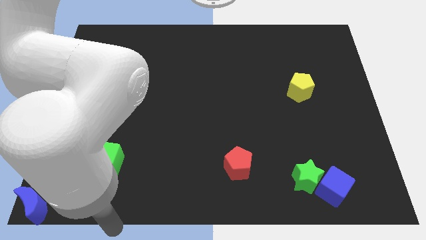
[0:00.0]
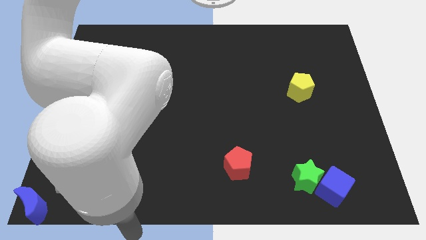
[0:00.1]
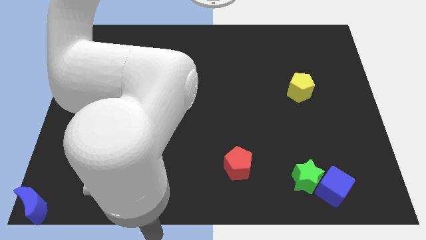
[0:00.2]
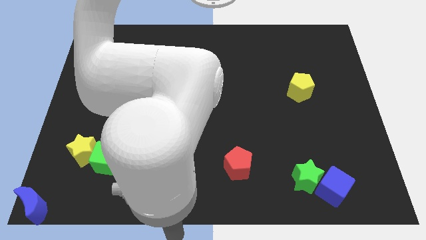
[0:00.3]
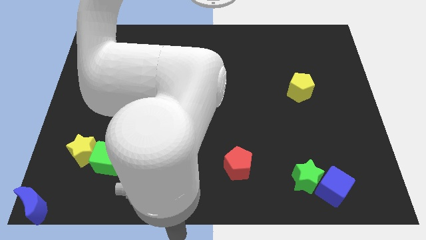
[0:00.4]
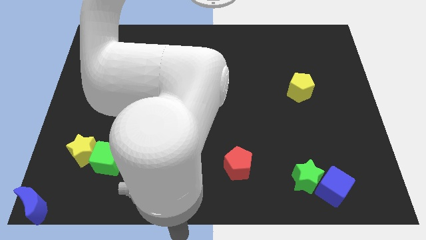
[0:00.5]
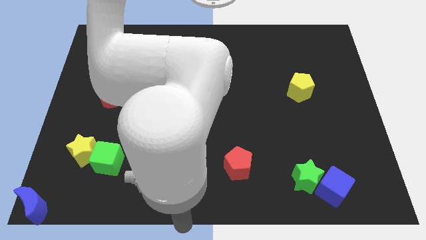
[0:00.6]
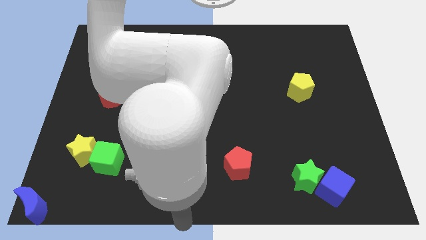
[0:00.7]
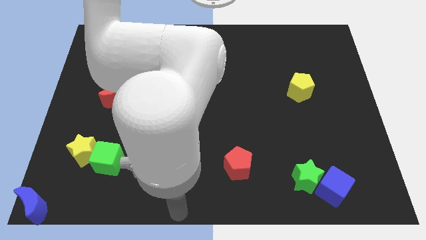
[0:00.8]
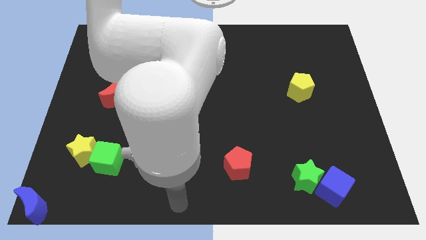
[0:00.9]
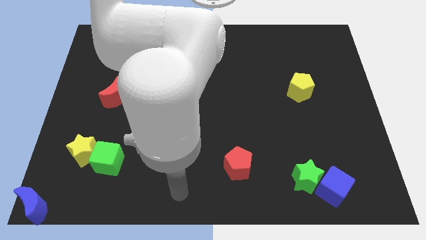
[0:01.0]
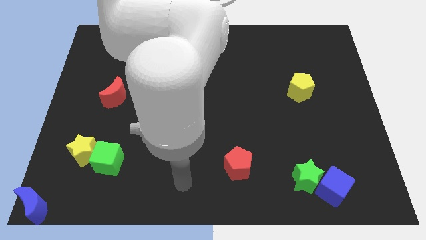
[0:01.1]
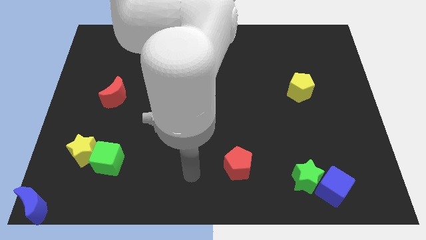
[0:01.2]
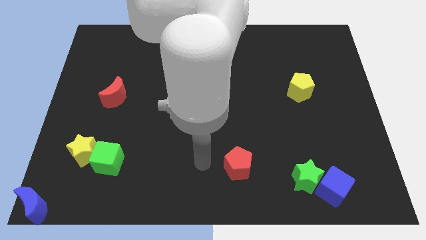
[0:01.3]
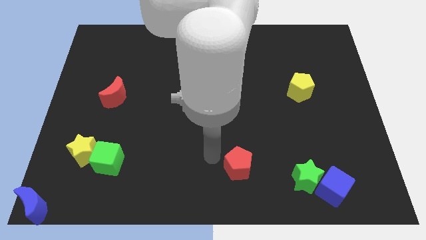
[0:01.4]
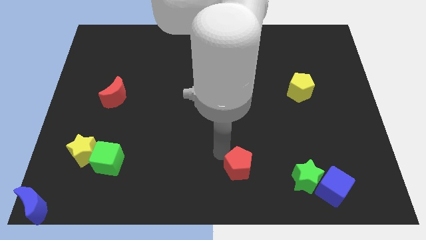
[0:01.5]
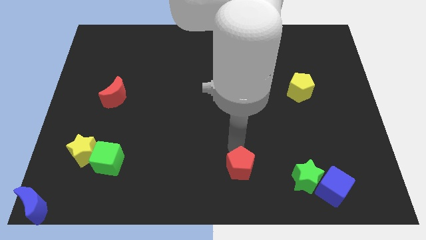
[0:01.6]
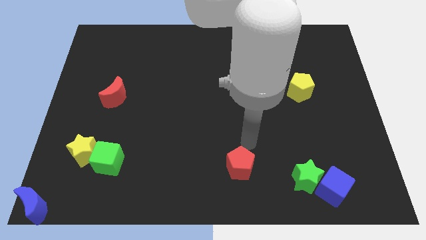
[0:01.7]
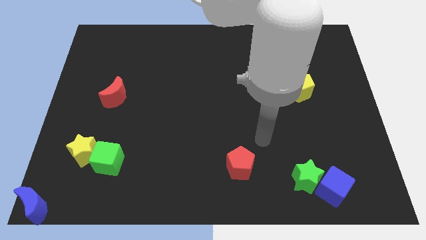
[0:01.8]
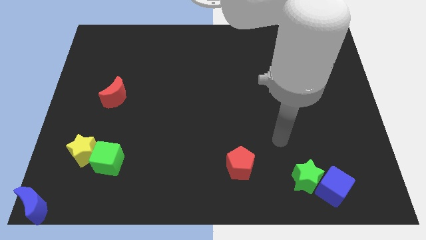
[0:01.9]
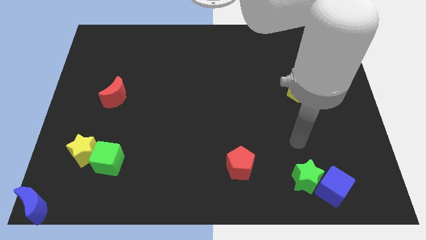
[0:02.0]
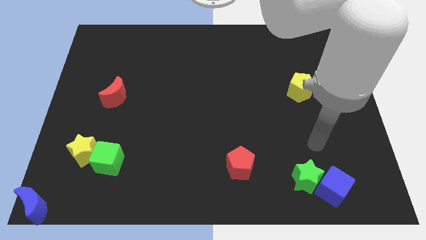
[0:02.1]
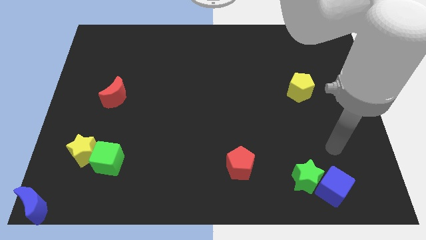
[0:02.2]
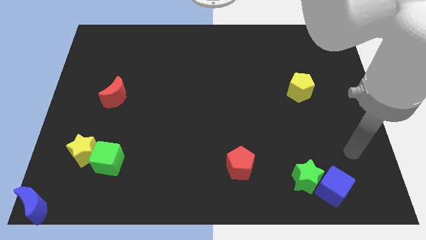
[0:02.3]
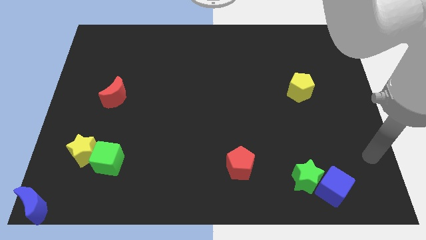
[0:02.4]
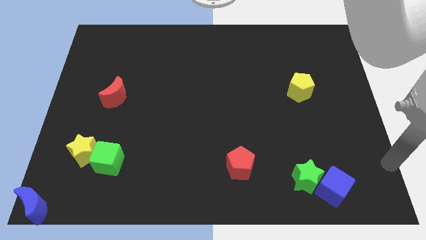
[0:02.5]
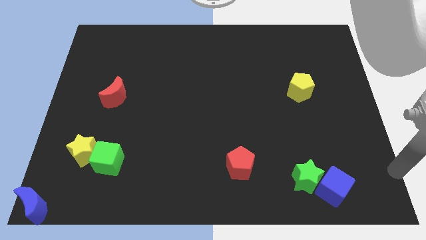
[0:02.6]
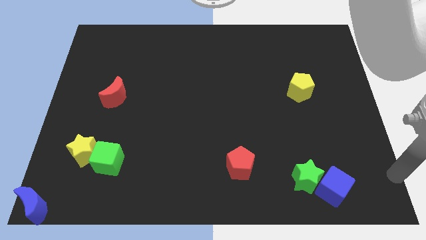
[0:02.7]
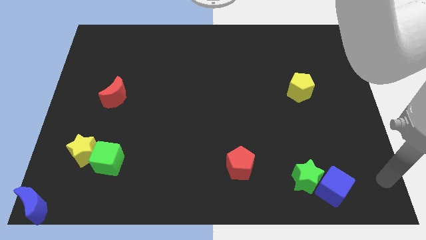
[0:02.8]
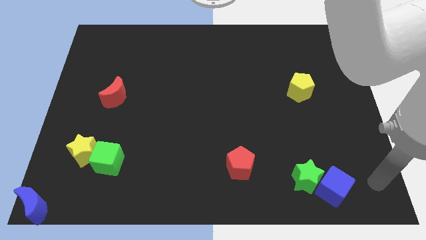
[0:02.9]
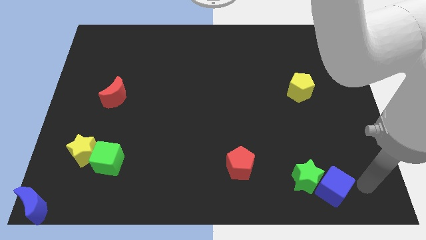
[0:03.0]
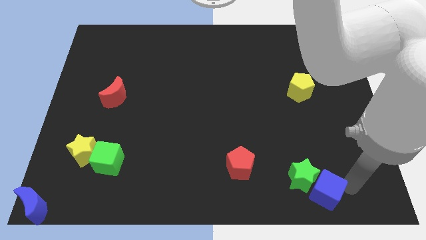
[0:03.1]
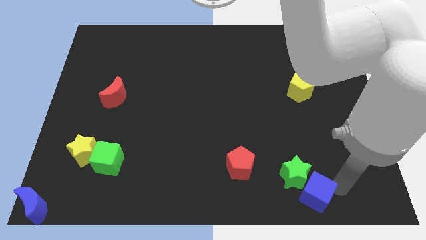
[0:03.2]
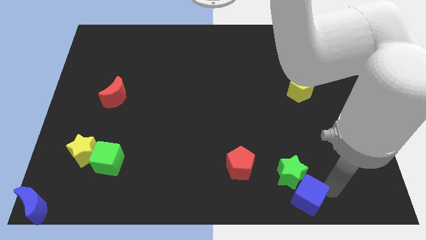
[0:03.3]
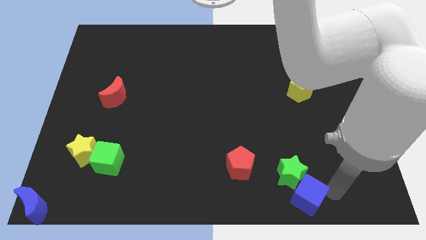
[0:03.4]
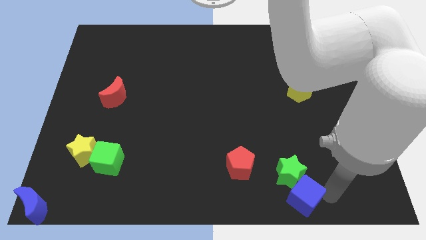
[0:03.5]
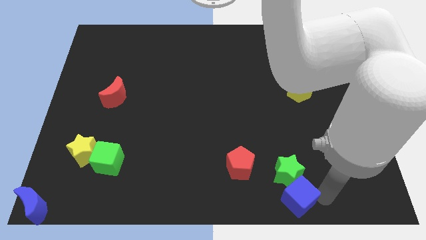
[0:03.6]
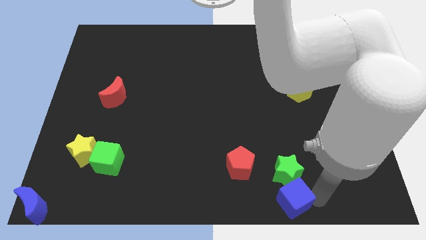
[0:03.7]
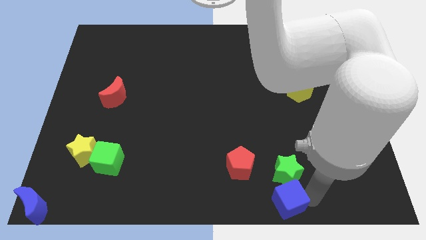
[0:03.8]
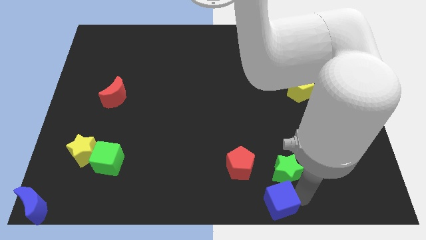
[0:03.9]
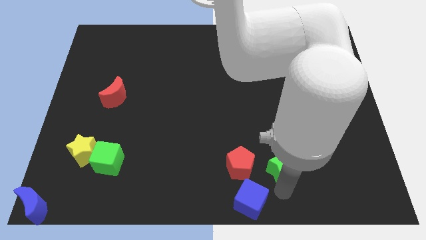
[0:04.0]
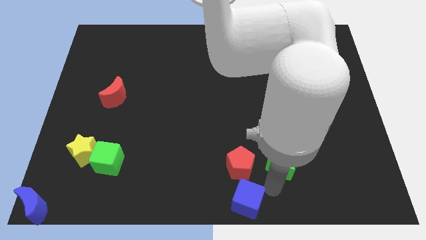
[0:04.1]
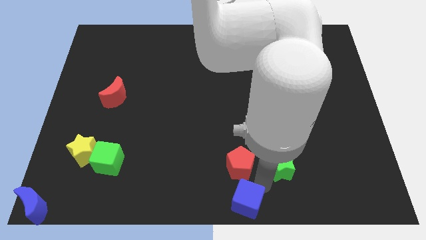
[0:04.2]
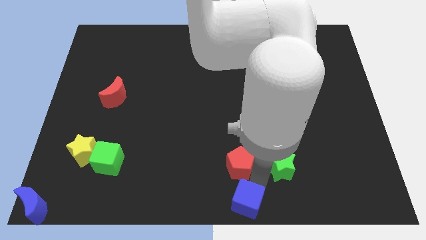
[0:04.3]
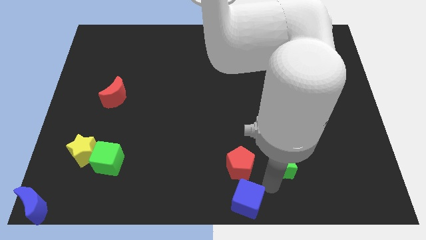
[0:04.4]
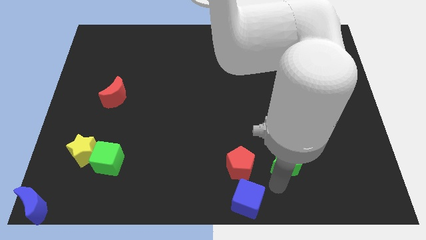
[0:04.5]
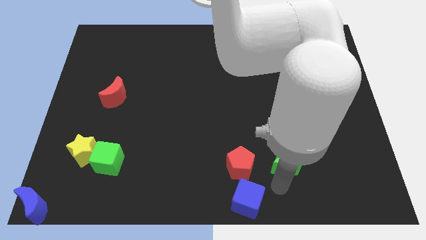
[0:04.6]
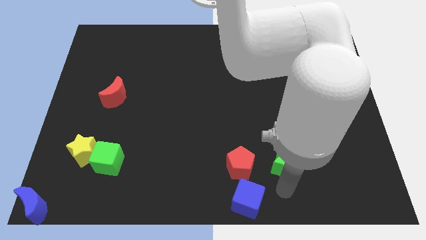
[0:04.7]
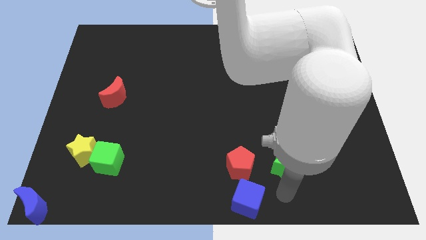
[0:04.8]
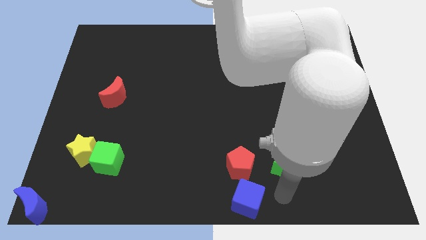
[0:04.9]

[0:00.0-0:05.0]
place the blue cube below the red pentagon

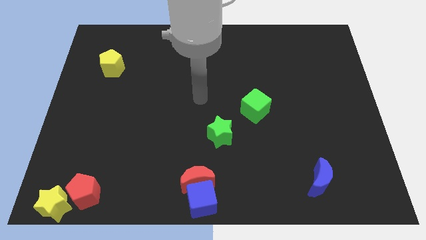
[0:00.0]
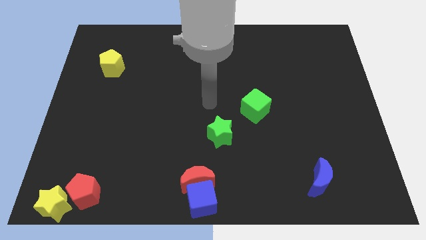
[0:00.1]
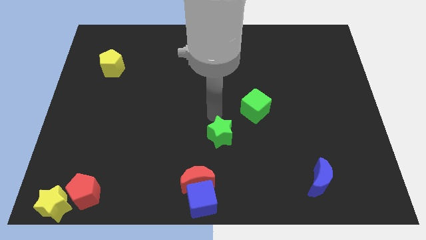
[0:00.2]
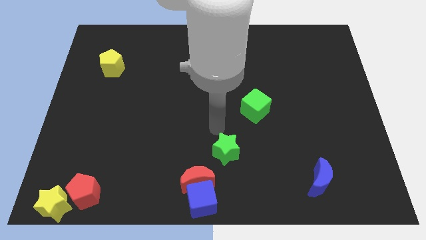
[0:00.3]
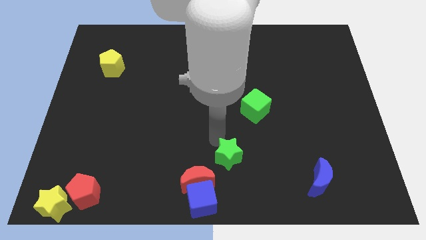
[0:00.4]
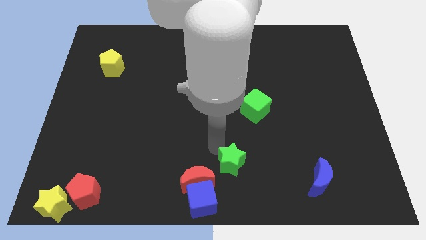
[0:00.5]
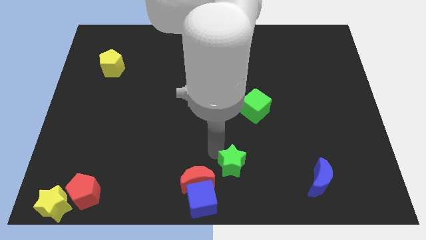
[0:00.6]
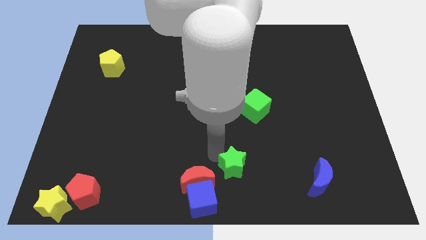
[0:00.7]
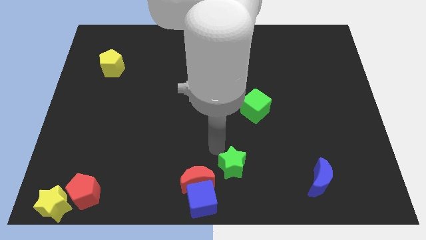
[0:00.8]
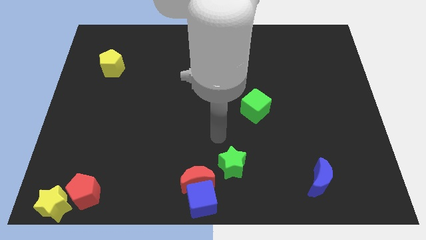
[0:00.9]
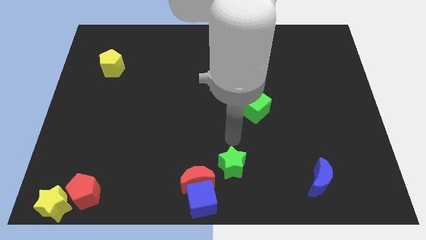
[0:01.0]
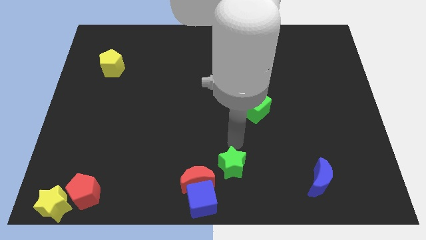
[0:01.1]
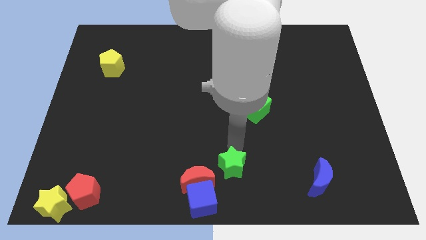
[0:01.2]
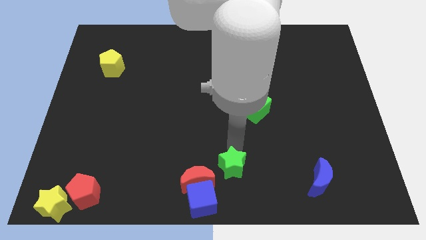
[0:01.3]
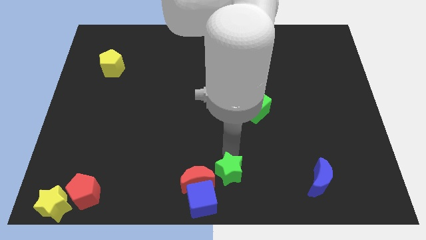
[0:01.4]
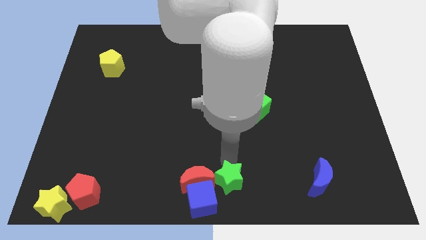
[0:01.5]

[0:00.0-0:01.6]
place the green star right to the red moon

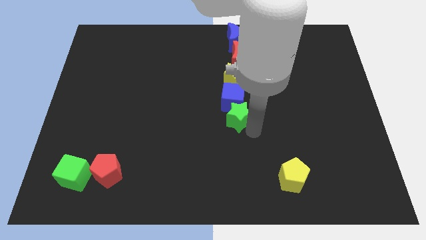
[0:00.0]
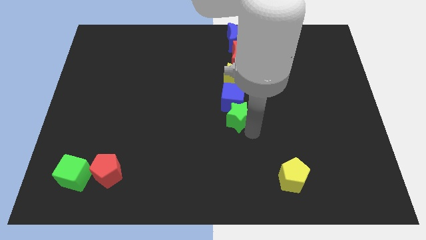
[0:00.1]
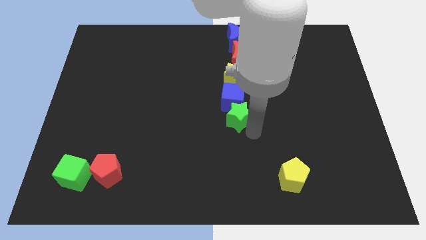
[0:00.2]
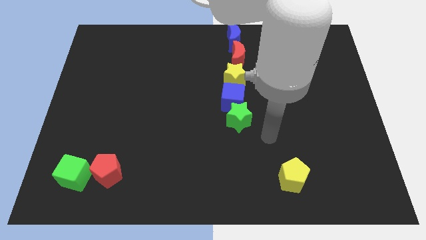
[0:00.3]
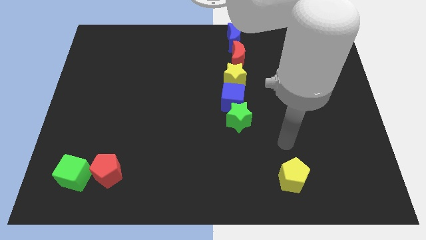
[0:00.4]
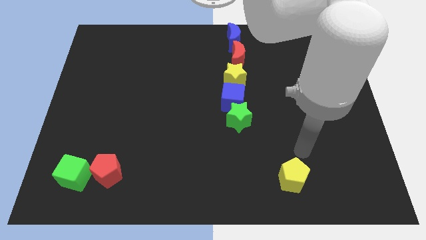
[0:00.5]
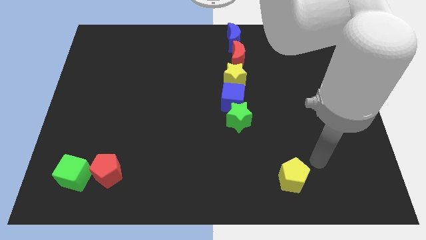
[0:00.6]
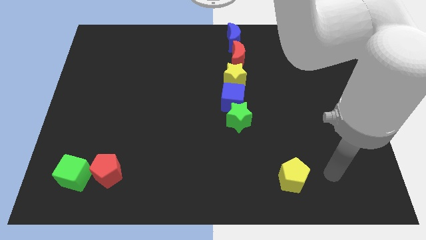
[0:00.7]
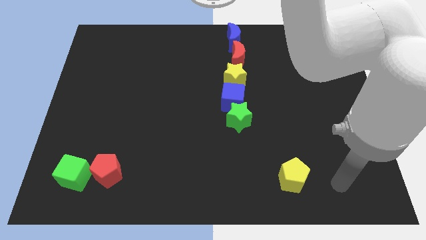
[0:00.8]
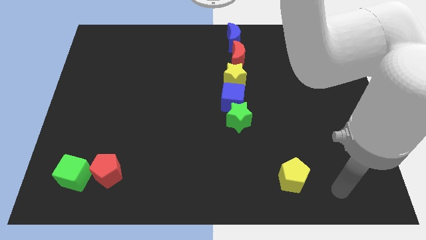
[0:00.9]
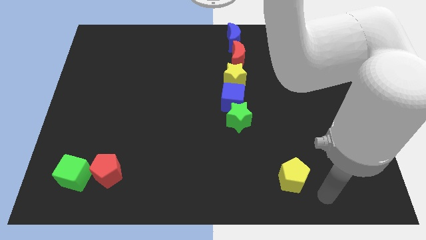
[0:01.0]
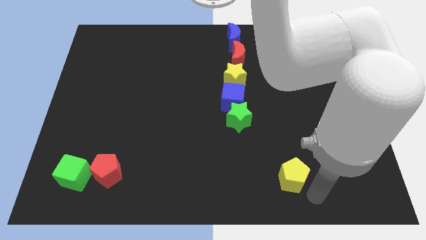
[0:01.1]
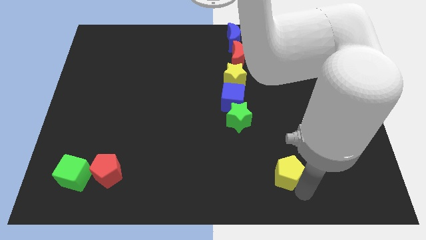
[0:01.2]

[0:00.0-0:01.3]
place the arm close to the yellow pentagon

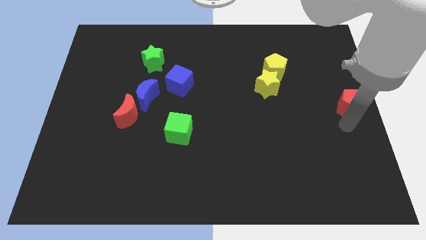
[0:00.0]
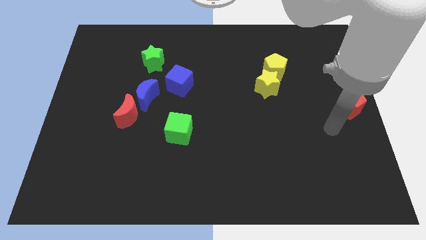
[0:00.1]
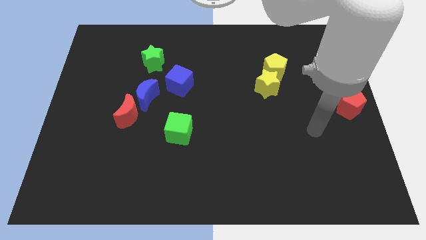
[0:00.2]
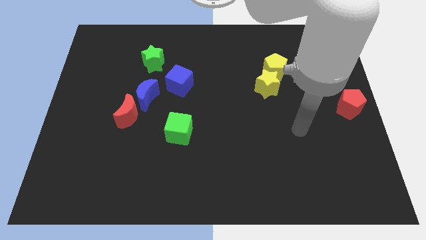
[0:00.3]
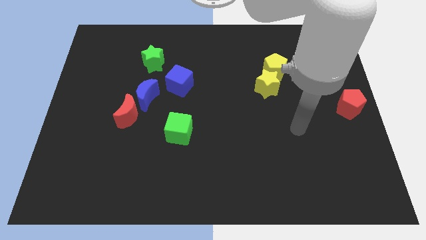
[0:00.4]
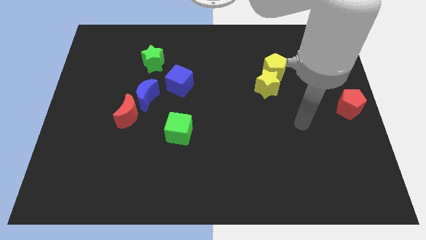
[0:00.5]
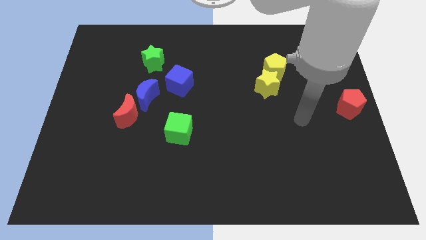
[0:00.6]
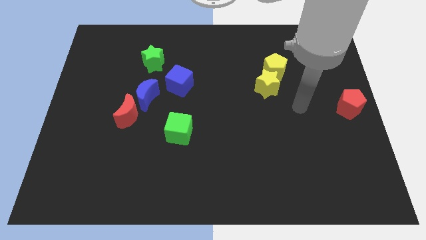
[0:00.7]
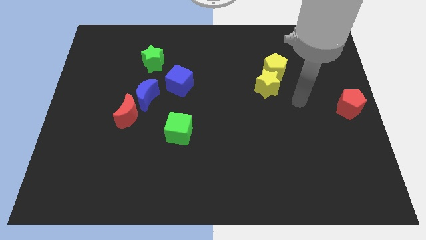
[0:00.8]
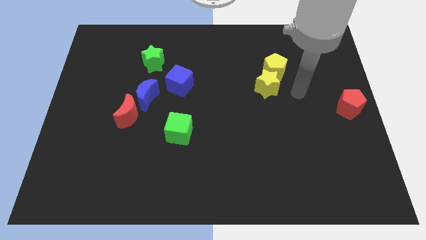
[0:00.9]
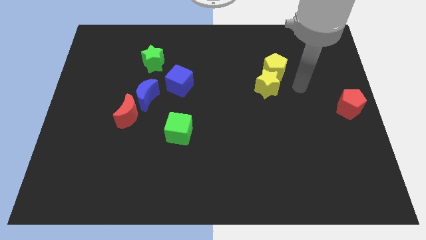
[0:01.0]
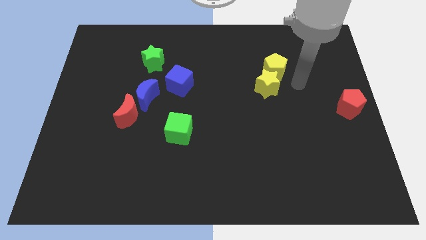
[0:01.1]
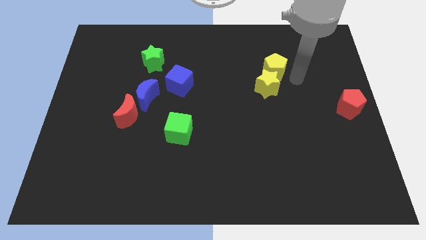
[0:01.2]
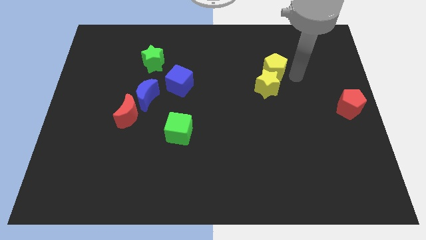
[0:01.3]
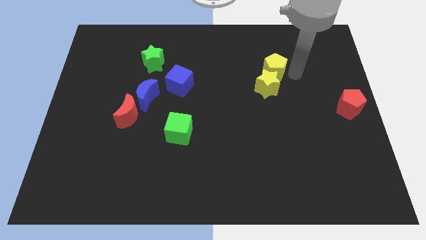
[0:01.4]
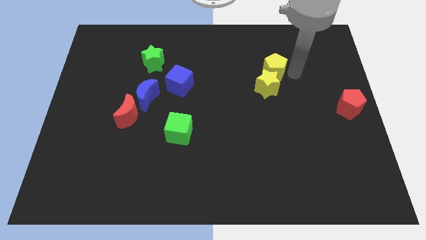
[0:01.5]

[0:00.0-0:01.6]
place your arm towards the yellow pentagon
